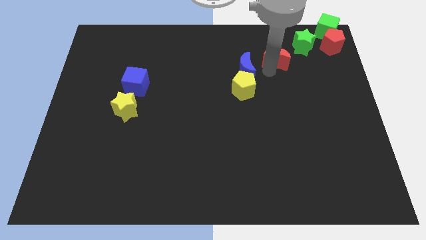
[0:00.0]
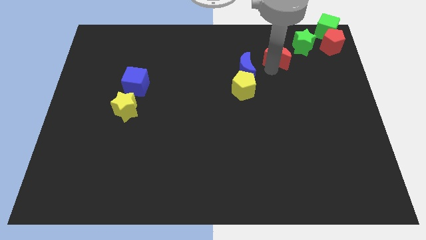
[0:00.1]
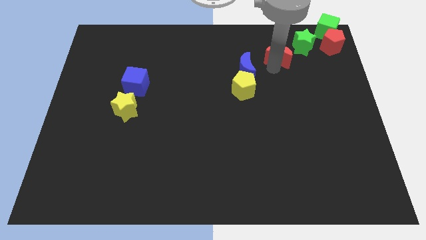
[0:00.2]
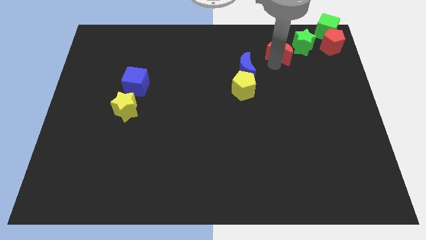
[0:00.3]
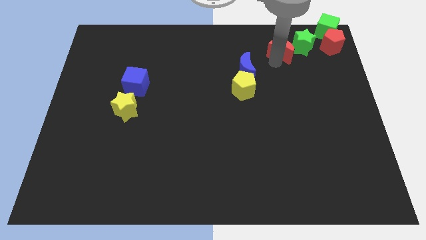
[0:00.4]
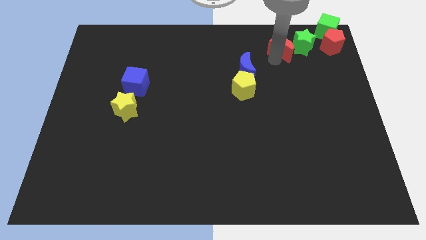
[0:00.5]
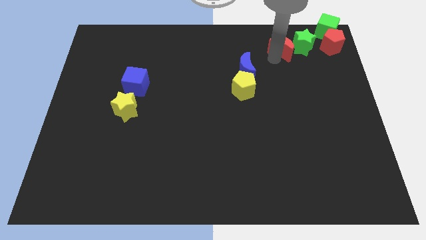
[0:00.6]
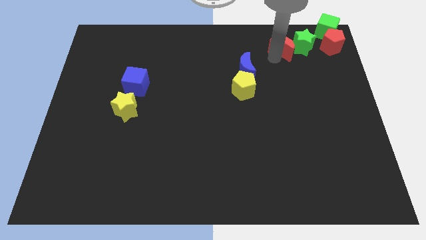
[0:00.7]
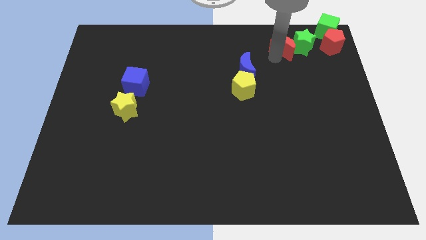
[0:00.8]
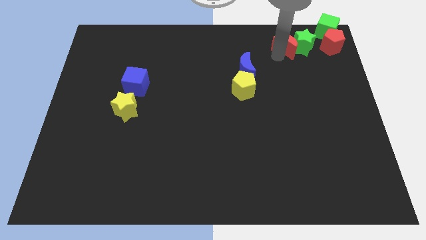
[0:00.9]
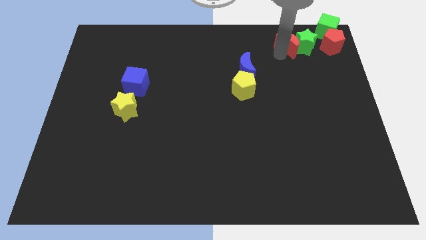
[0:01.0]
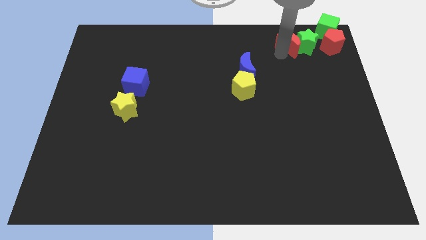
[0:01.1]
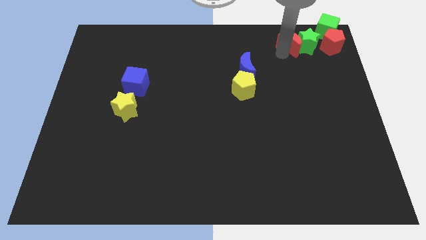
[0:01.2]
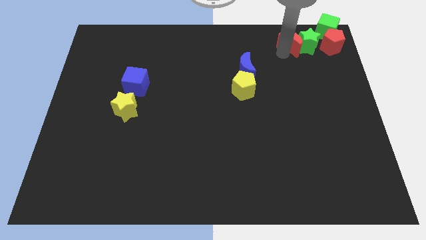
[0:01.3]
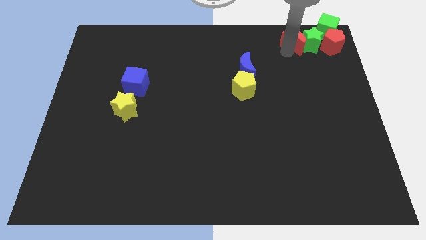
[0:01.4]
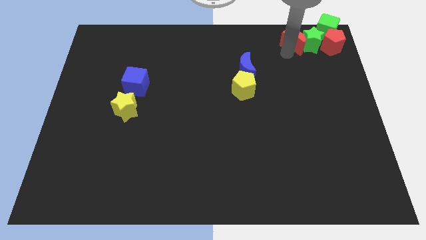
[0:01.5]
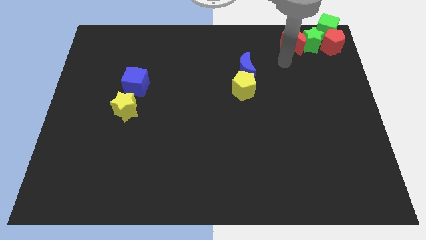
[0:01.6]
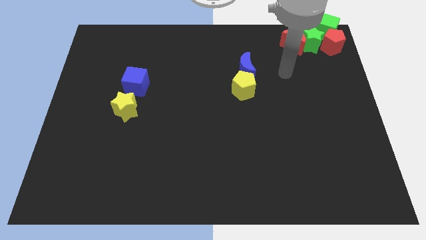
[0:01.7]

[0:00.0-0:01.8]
move the red moon into the green star

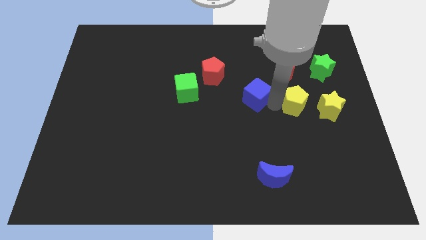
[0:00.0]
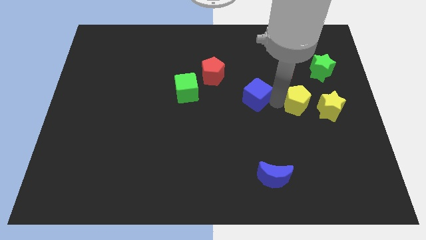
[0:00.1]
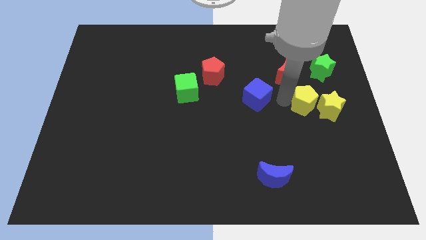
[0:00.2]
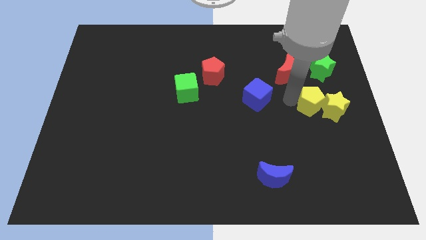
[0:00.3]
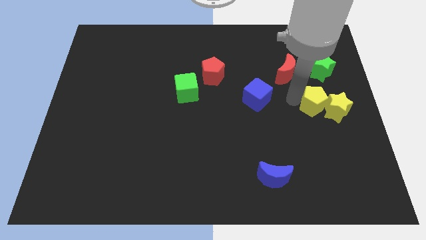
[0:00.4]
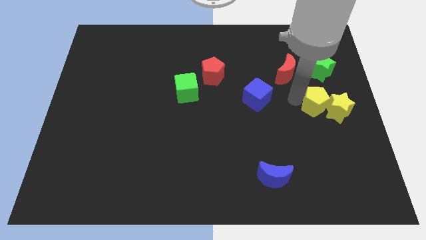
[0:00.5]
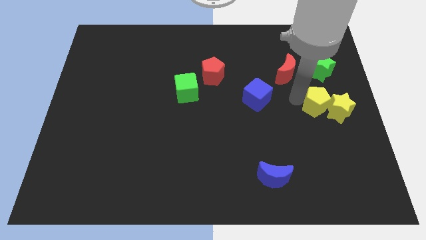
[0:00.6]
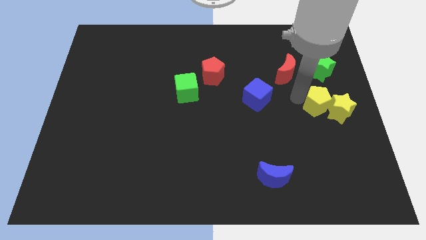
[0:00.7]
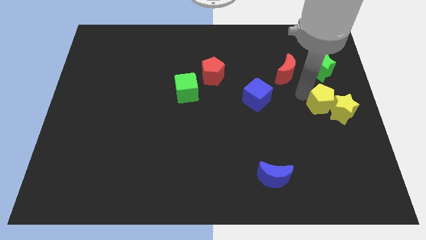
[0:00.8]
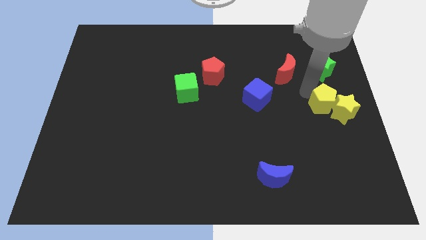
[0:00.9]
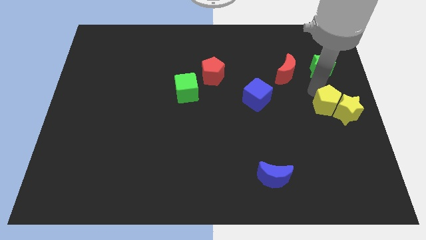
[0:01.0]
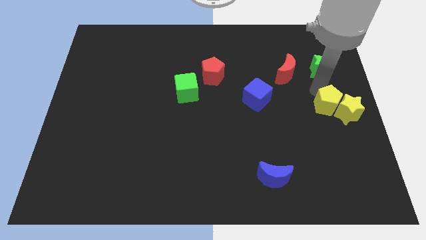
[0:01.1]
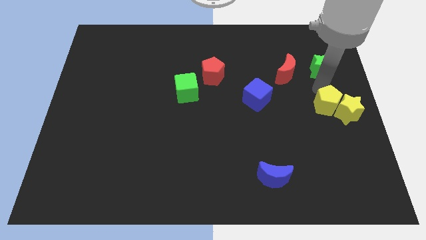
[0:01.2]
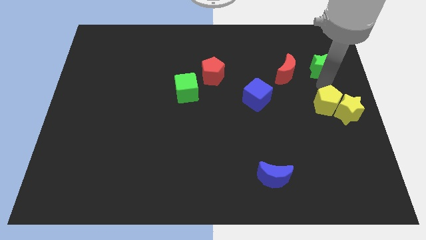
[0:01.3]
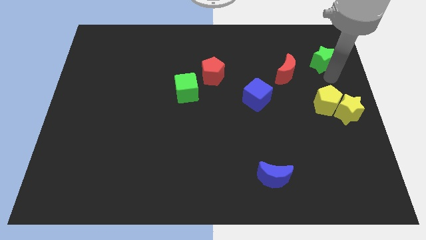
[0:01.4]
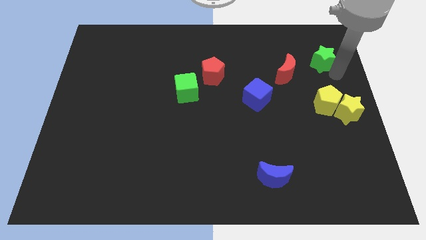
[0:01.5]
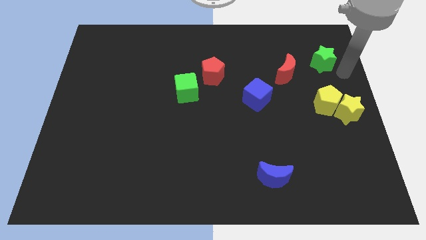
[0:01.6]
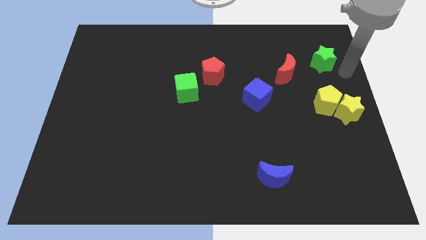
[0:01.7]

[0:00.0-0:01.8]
put the yellow pentagon into the yellow star

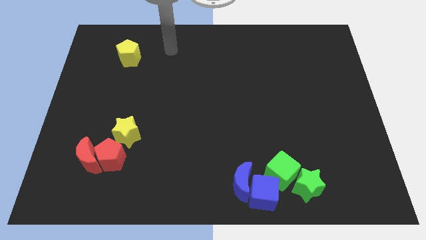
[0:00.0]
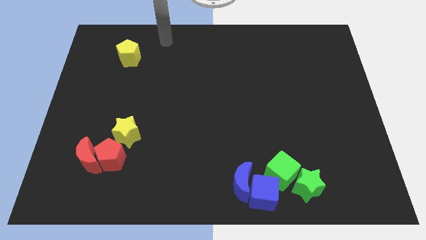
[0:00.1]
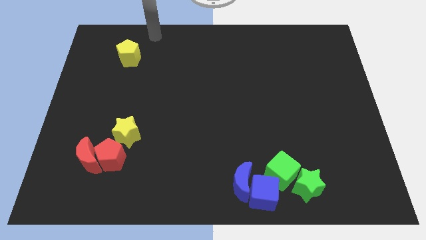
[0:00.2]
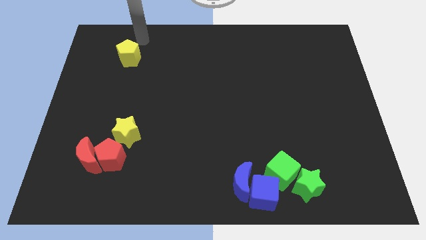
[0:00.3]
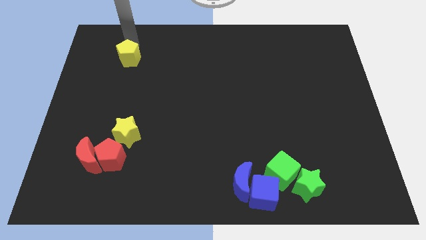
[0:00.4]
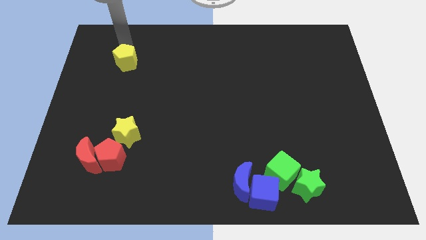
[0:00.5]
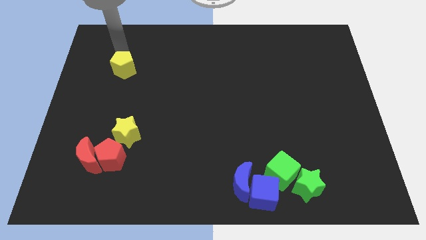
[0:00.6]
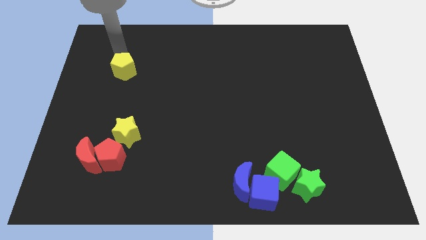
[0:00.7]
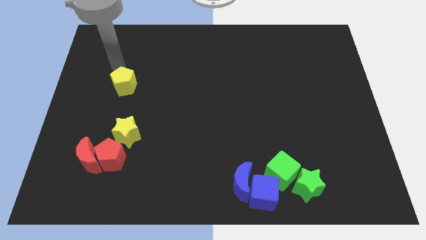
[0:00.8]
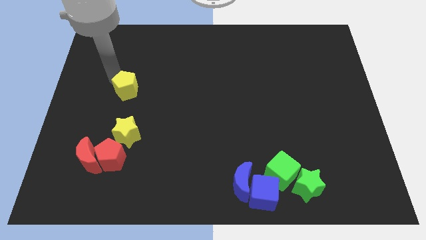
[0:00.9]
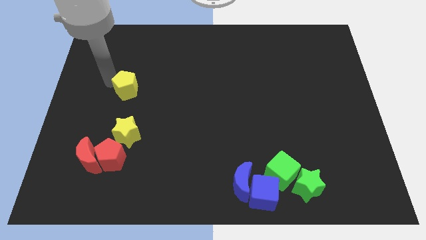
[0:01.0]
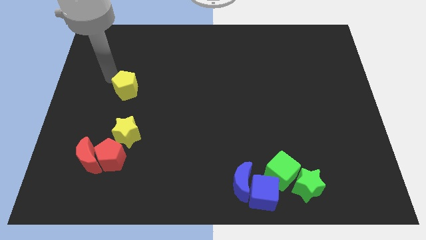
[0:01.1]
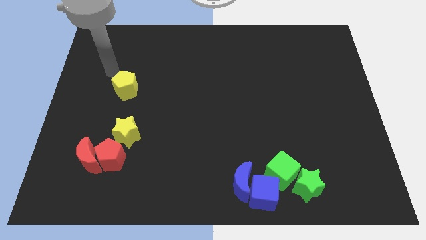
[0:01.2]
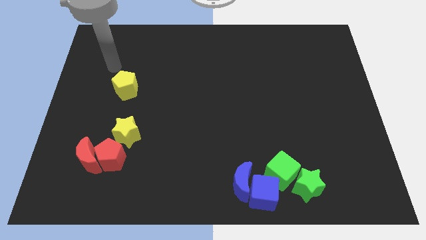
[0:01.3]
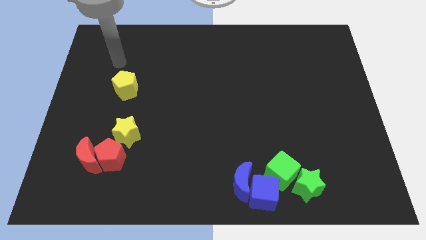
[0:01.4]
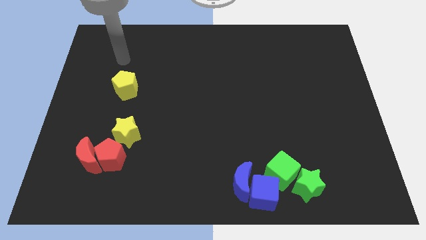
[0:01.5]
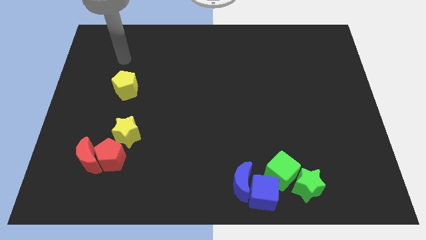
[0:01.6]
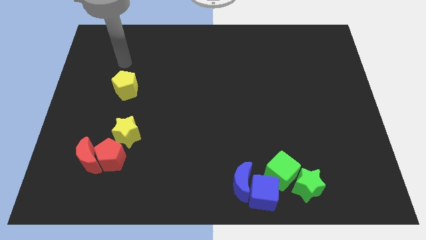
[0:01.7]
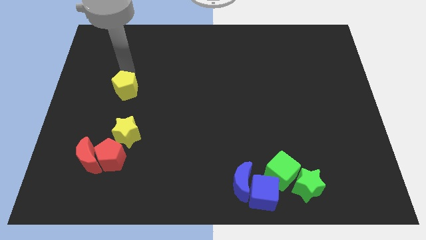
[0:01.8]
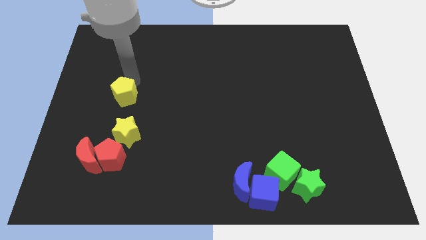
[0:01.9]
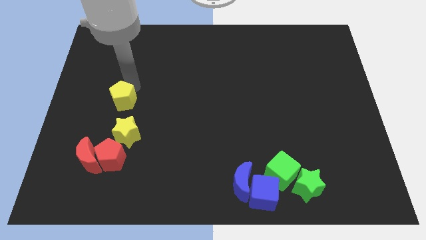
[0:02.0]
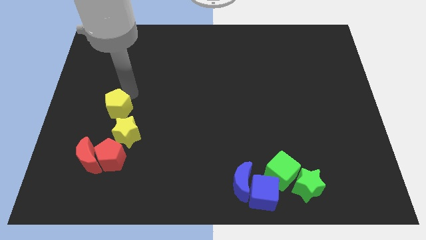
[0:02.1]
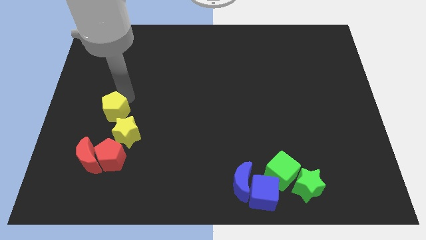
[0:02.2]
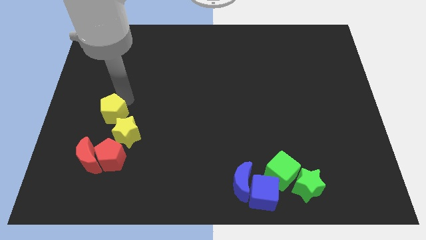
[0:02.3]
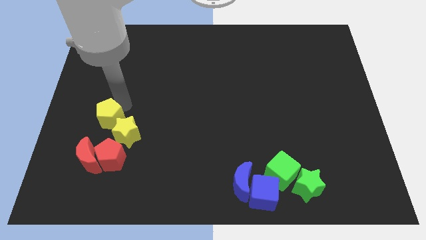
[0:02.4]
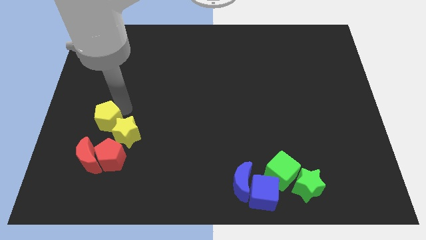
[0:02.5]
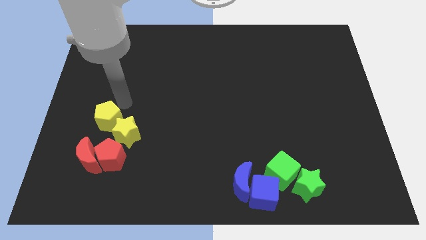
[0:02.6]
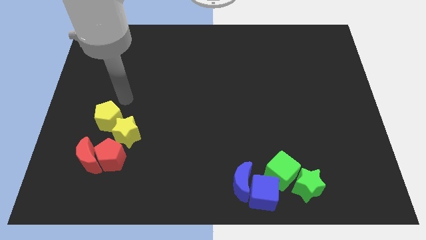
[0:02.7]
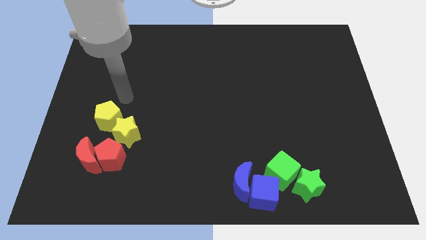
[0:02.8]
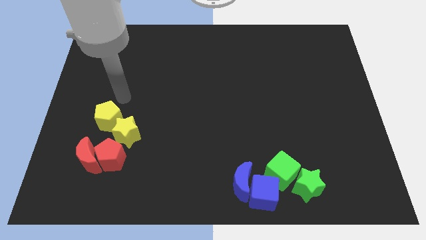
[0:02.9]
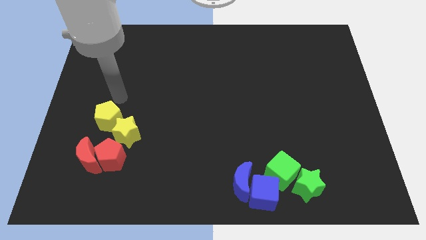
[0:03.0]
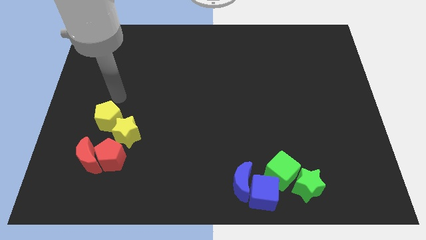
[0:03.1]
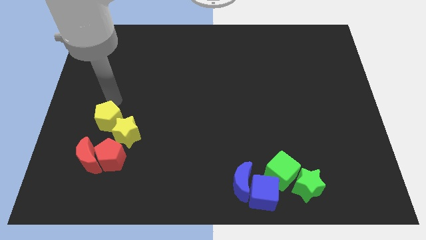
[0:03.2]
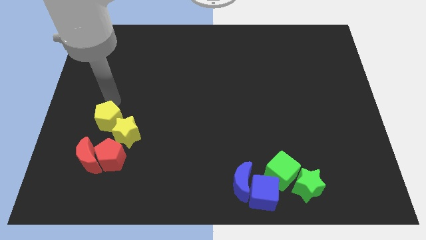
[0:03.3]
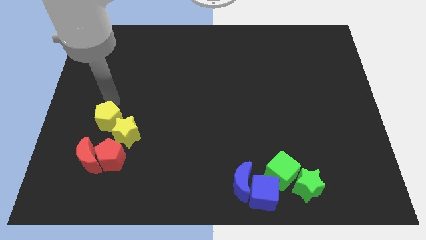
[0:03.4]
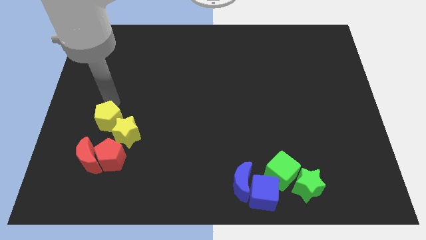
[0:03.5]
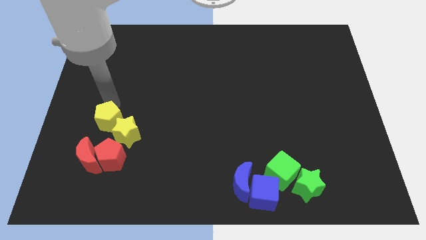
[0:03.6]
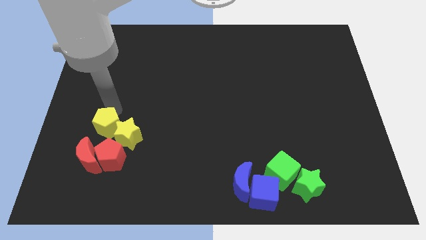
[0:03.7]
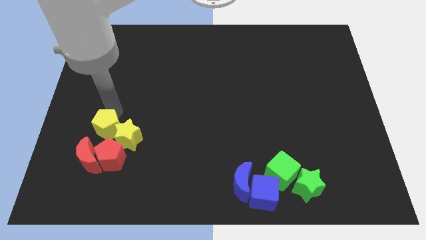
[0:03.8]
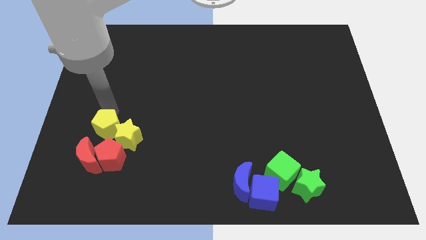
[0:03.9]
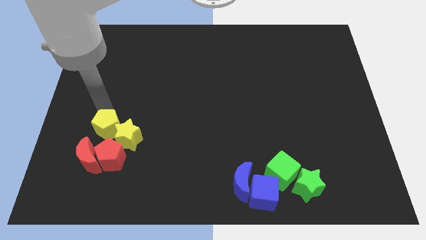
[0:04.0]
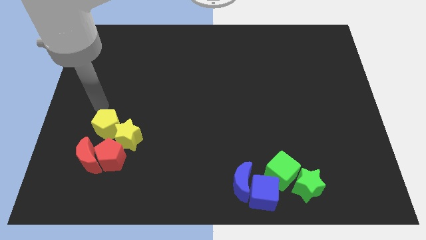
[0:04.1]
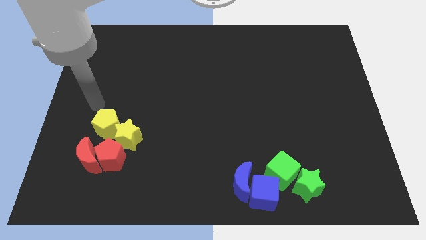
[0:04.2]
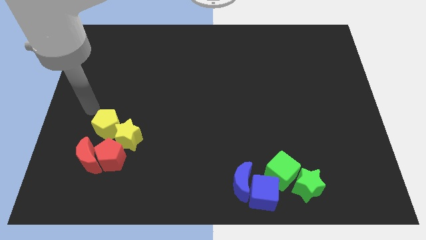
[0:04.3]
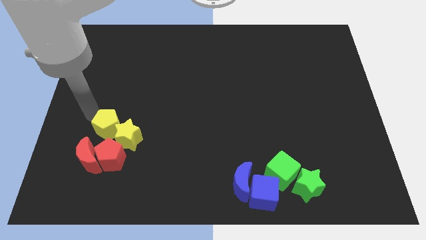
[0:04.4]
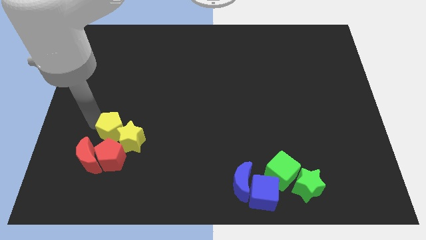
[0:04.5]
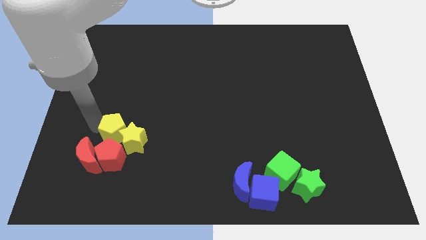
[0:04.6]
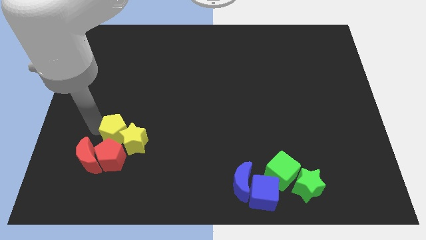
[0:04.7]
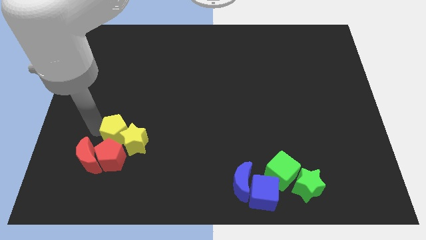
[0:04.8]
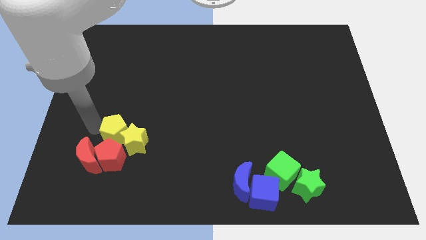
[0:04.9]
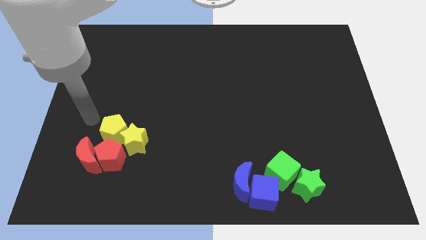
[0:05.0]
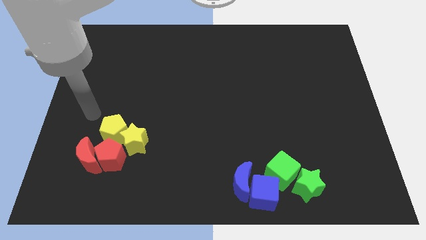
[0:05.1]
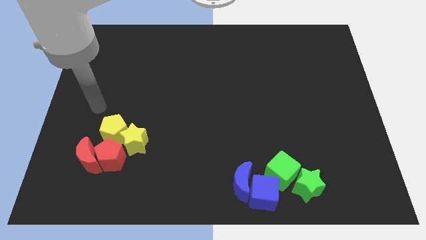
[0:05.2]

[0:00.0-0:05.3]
push the yellow pentagon into the yellow star
